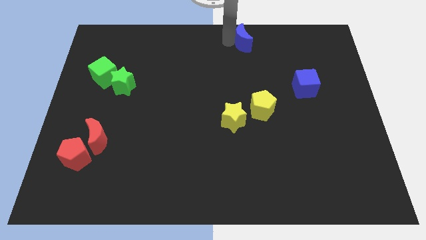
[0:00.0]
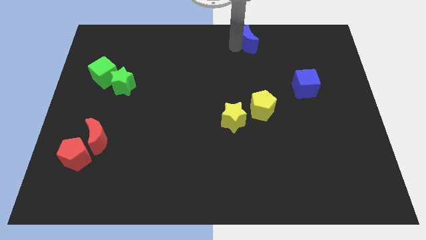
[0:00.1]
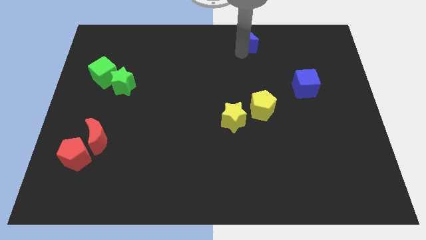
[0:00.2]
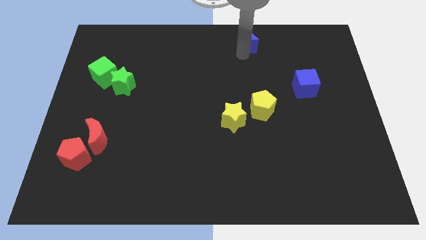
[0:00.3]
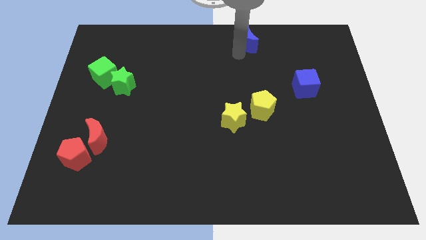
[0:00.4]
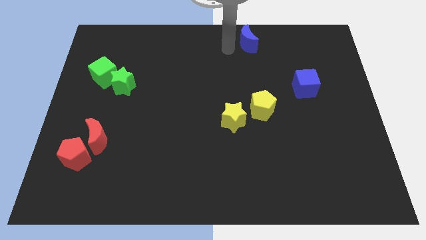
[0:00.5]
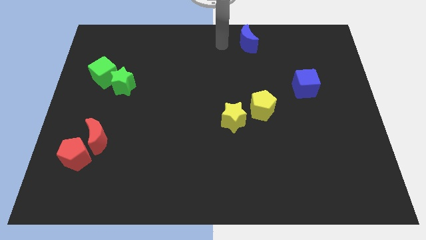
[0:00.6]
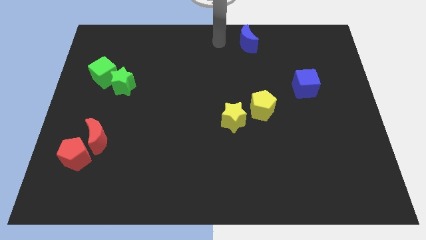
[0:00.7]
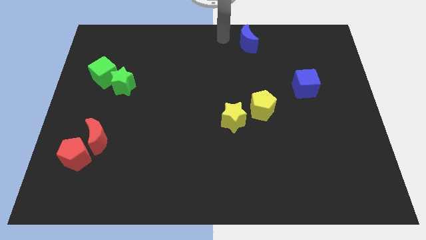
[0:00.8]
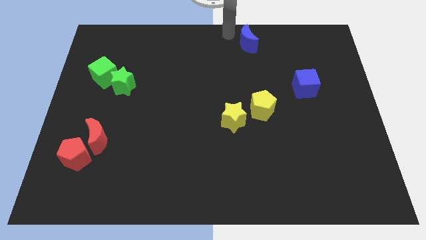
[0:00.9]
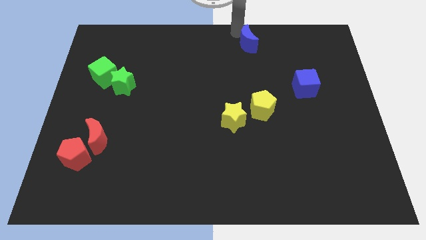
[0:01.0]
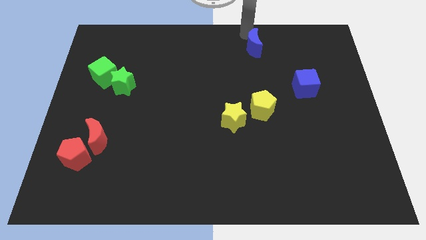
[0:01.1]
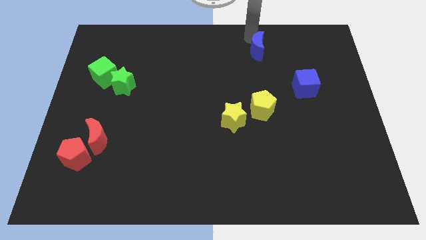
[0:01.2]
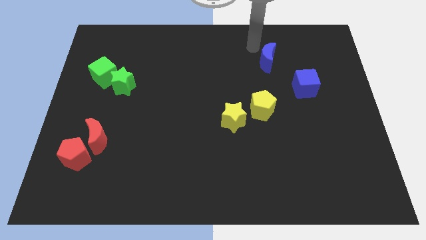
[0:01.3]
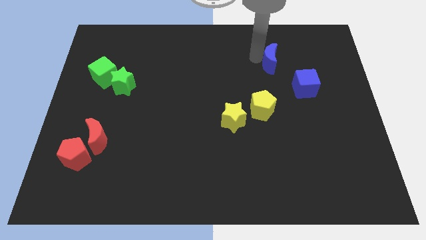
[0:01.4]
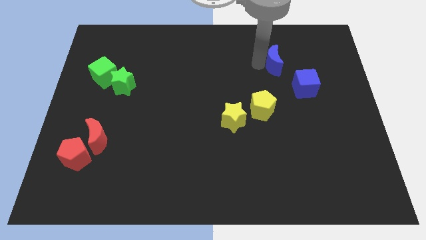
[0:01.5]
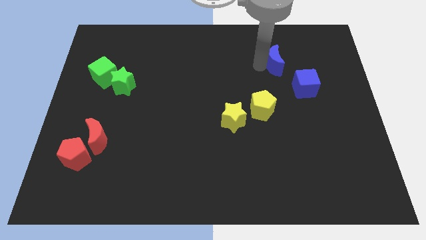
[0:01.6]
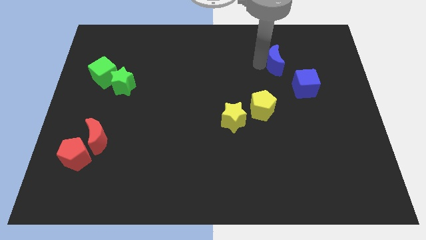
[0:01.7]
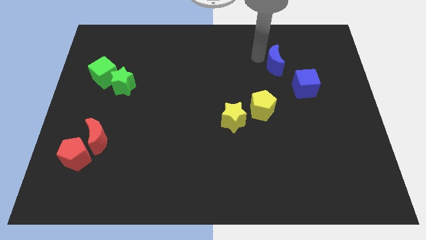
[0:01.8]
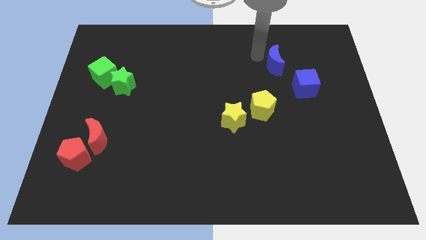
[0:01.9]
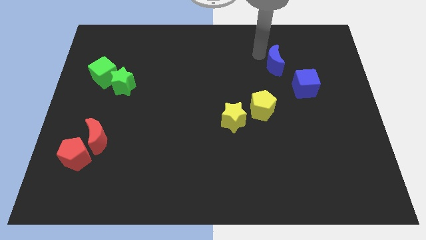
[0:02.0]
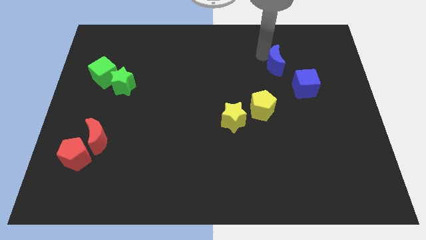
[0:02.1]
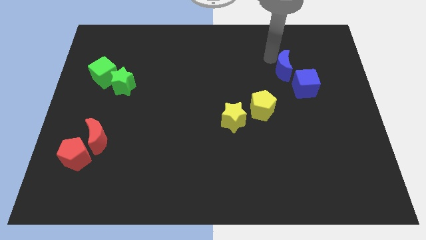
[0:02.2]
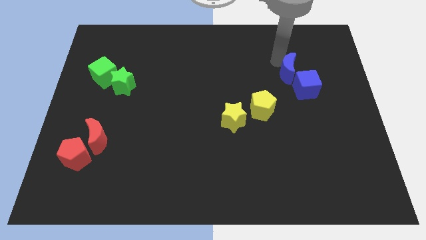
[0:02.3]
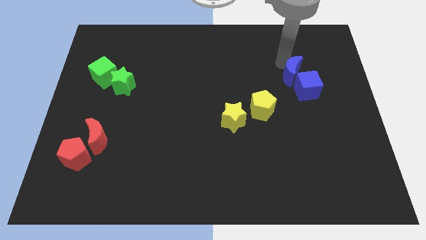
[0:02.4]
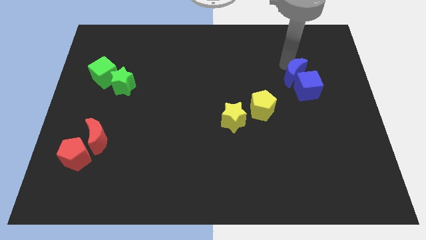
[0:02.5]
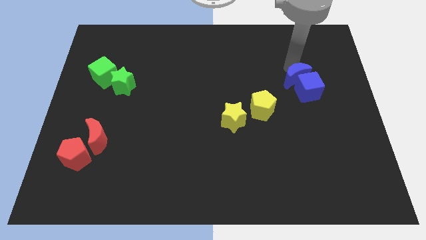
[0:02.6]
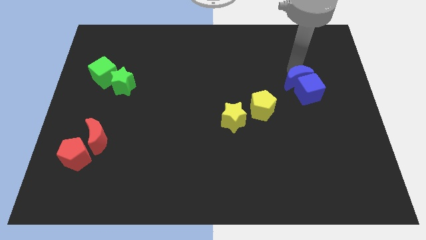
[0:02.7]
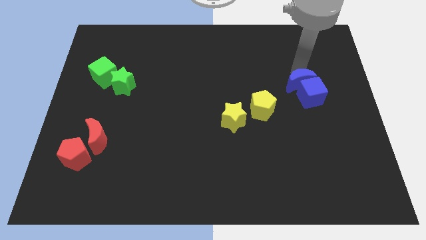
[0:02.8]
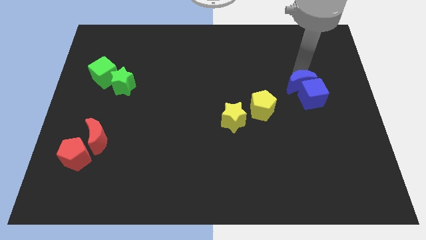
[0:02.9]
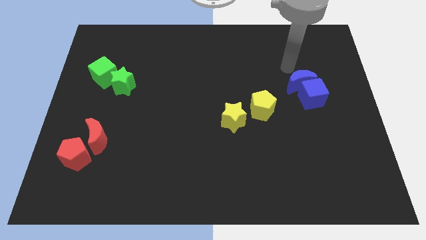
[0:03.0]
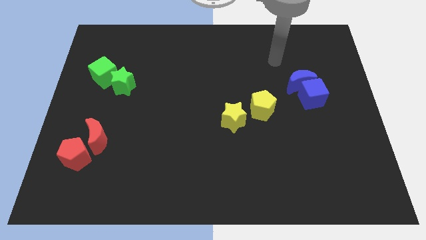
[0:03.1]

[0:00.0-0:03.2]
push the blue moon into the blue cube

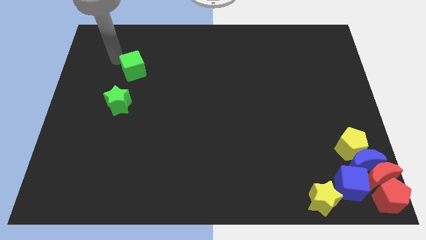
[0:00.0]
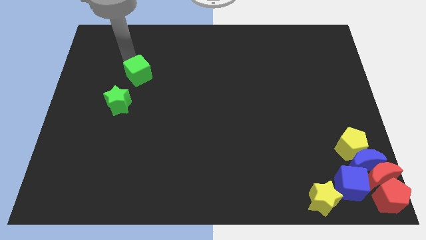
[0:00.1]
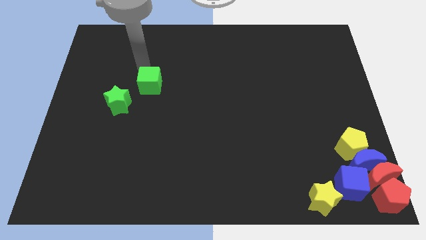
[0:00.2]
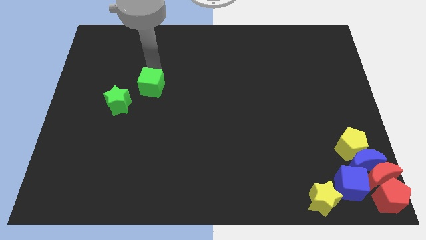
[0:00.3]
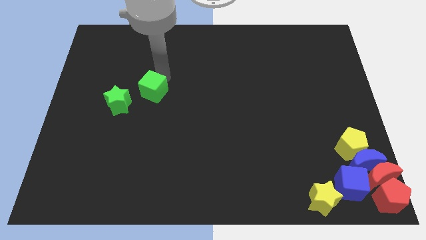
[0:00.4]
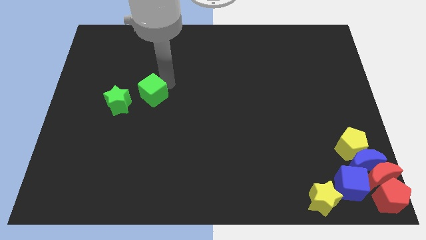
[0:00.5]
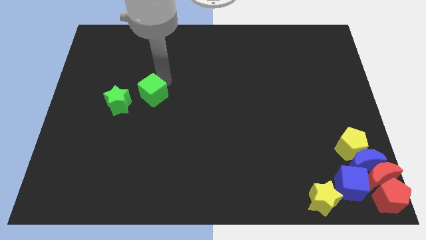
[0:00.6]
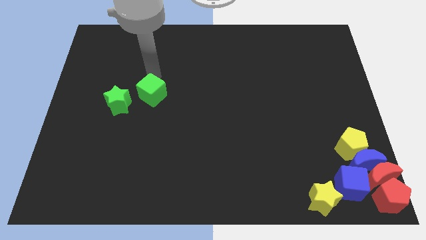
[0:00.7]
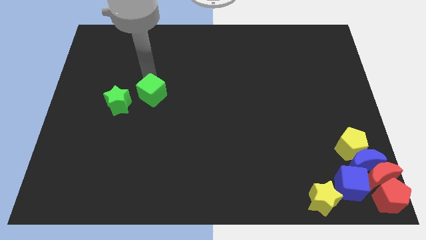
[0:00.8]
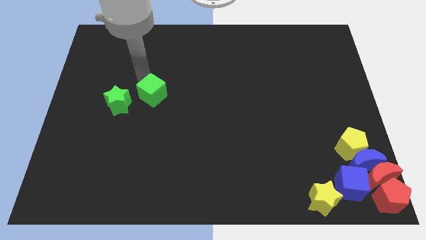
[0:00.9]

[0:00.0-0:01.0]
push the green cube to the right of the green star

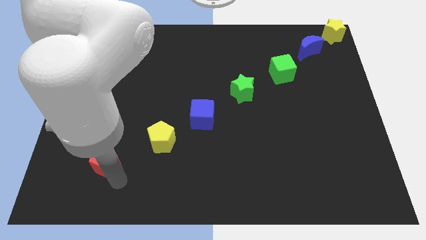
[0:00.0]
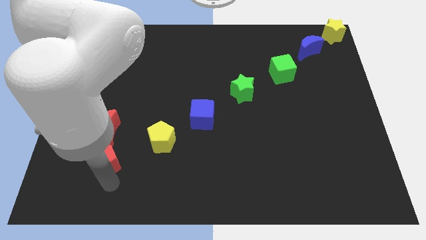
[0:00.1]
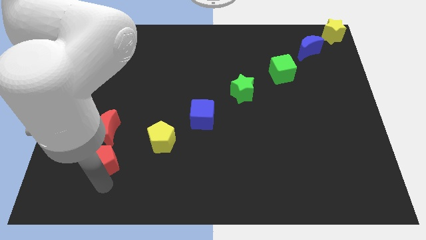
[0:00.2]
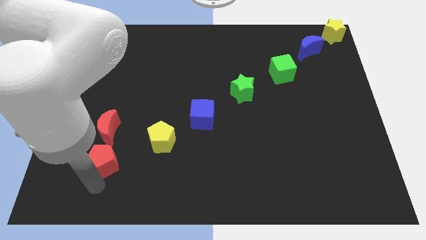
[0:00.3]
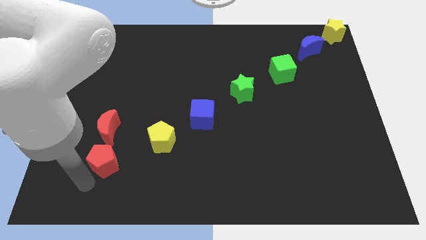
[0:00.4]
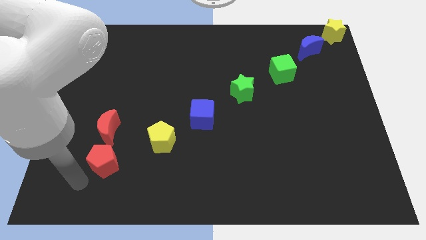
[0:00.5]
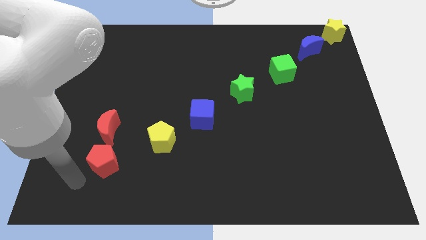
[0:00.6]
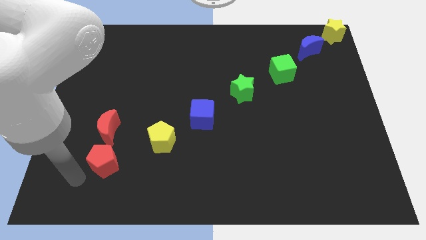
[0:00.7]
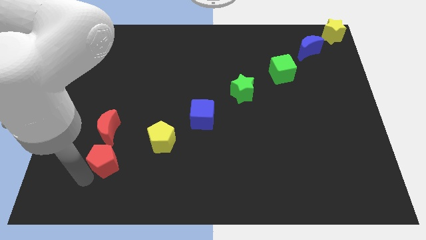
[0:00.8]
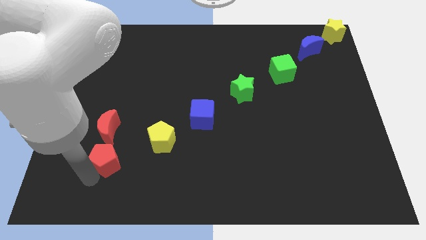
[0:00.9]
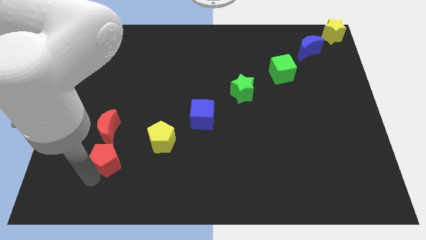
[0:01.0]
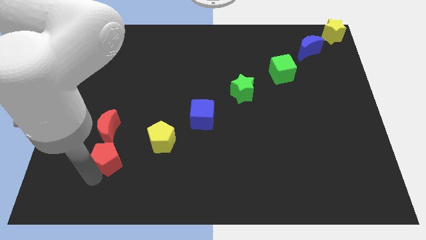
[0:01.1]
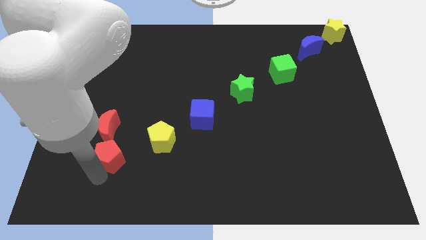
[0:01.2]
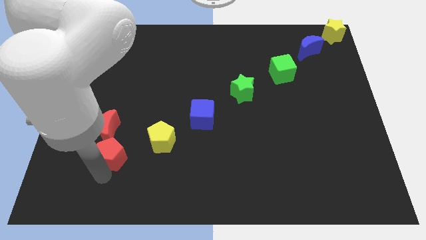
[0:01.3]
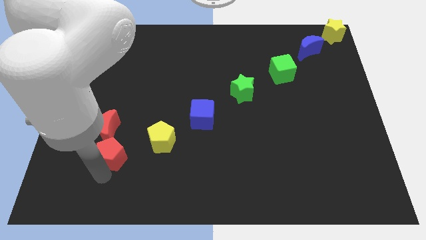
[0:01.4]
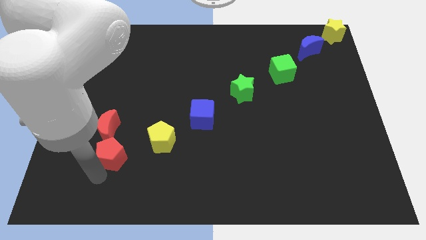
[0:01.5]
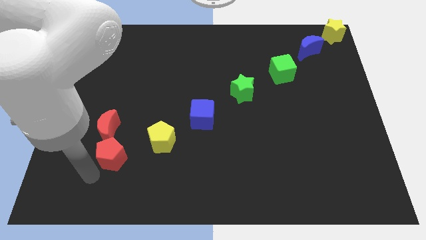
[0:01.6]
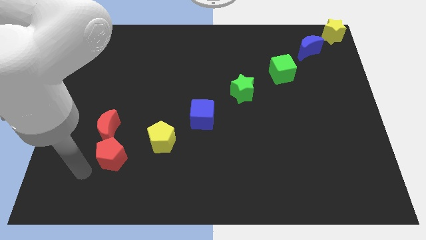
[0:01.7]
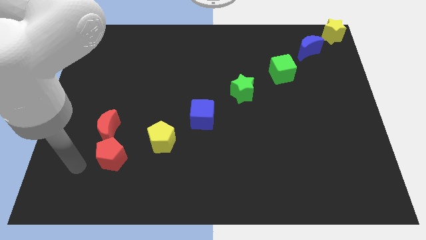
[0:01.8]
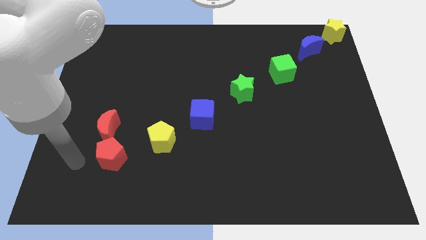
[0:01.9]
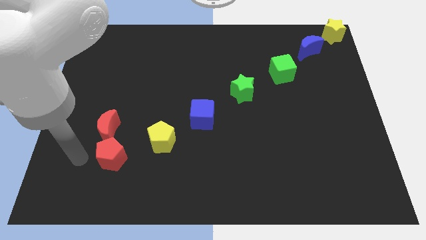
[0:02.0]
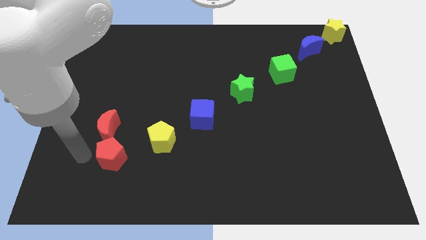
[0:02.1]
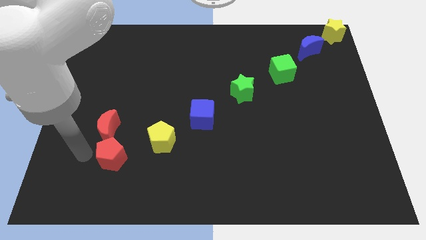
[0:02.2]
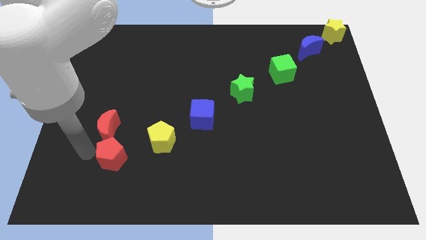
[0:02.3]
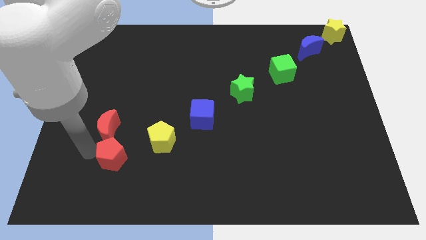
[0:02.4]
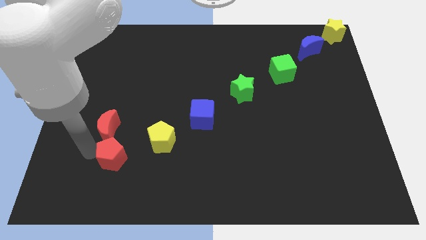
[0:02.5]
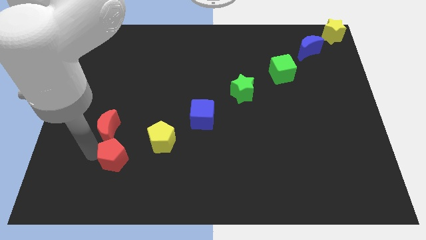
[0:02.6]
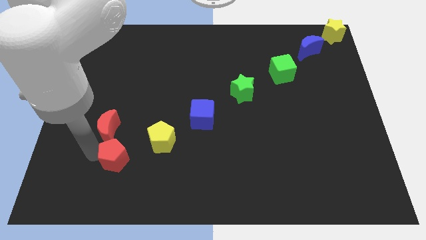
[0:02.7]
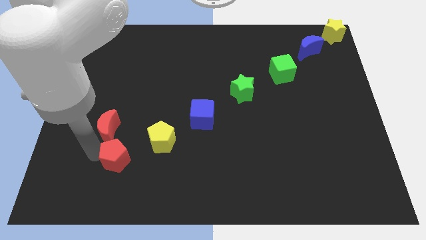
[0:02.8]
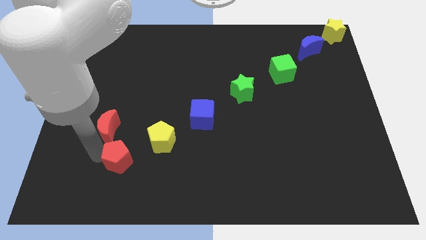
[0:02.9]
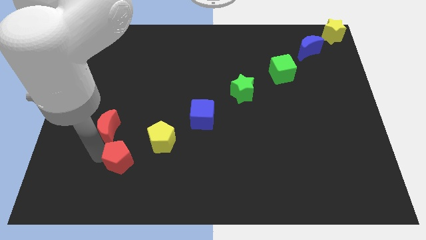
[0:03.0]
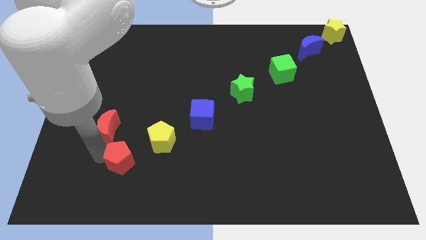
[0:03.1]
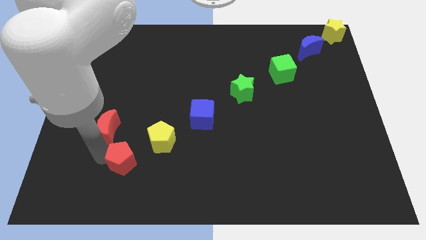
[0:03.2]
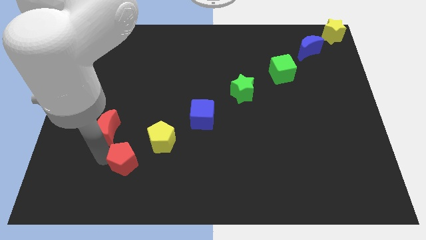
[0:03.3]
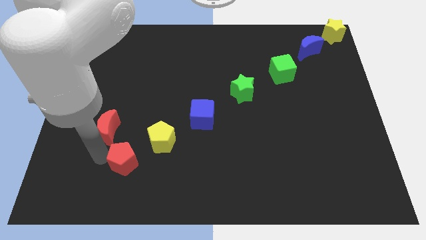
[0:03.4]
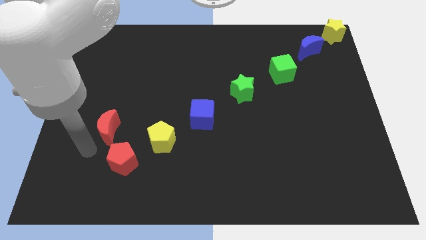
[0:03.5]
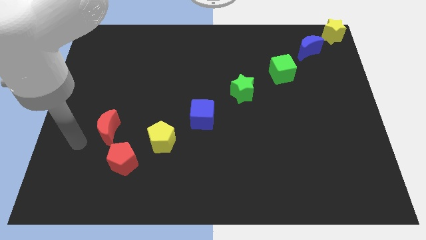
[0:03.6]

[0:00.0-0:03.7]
place red pentagon diagonal to yellow pentagon

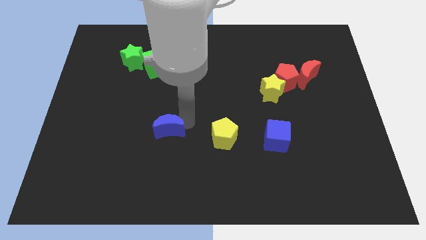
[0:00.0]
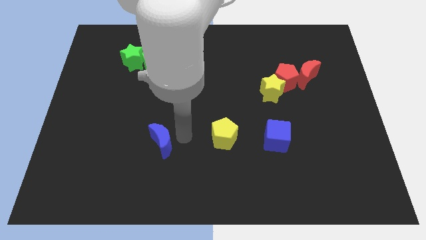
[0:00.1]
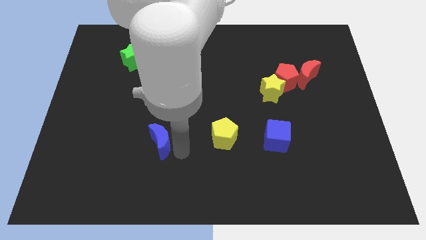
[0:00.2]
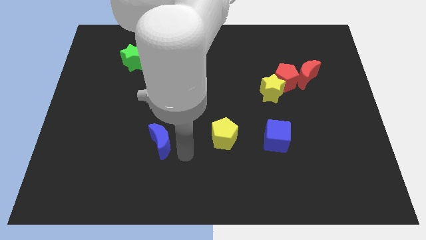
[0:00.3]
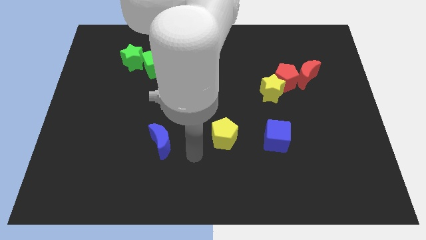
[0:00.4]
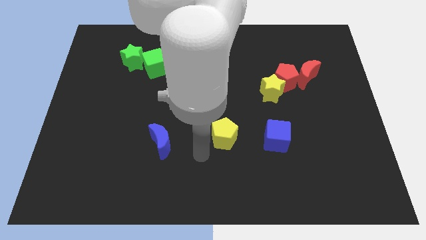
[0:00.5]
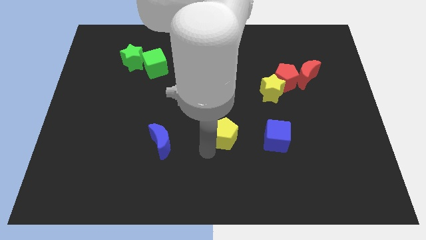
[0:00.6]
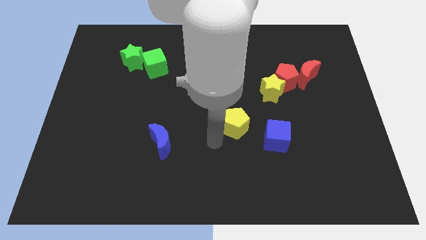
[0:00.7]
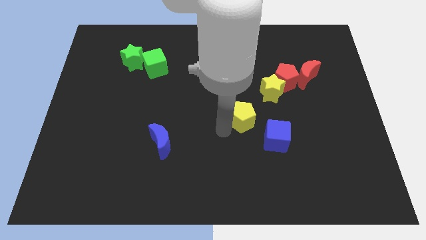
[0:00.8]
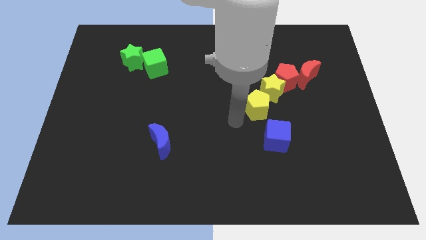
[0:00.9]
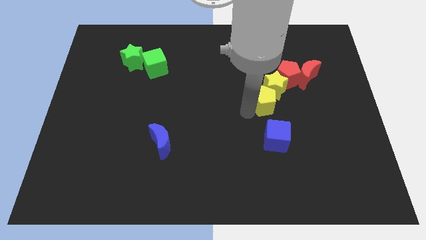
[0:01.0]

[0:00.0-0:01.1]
push the yellow pentagon into the bottom side of the yellow star
